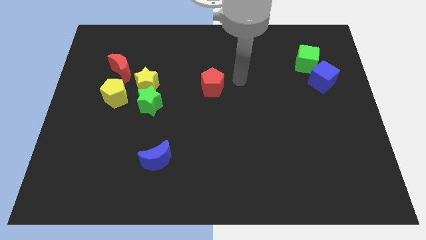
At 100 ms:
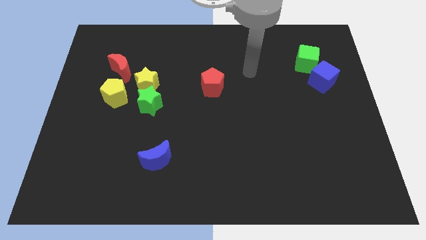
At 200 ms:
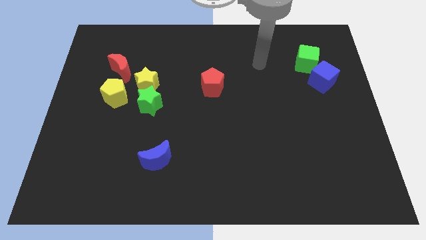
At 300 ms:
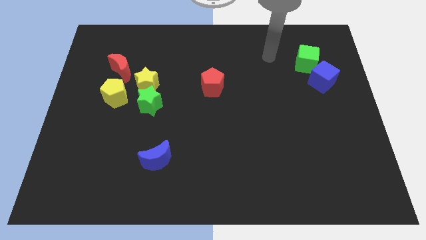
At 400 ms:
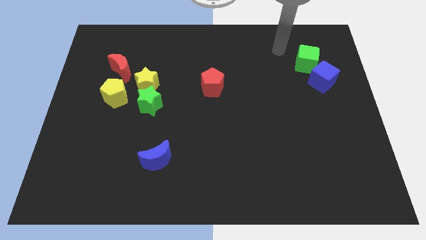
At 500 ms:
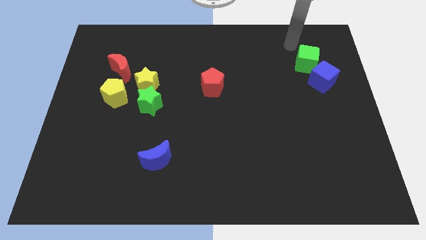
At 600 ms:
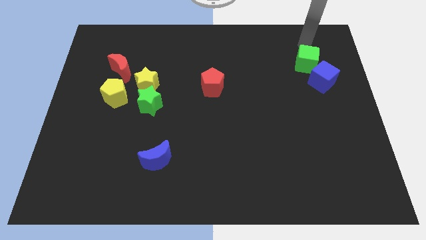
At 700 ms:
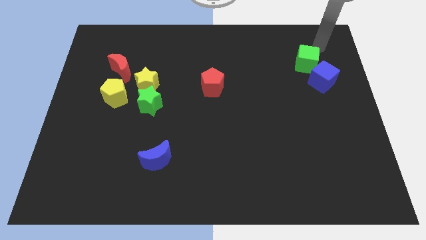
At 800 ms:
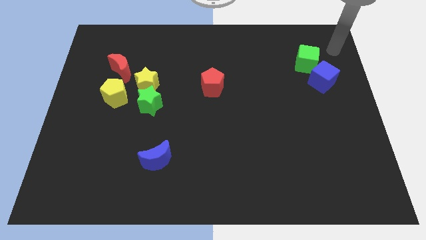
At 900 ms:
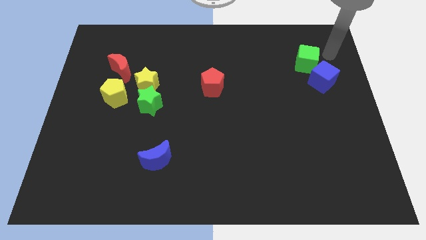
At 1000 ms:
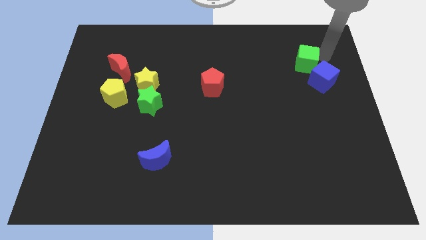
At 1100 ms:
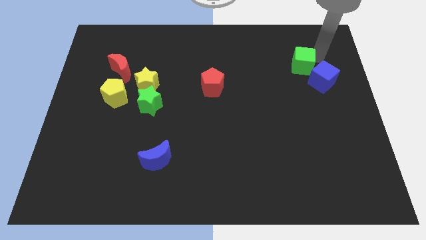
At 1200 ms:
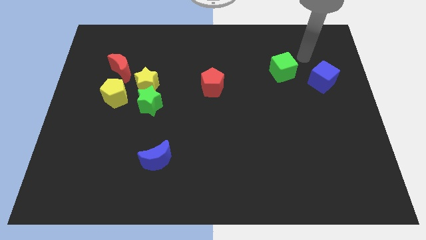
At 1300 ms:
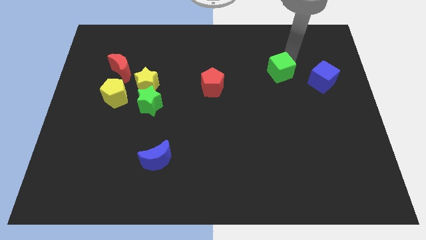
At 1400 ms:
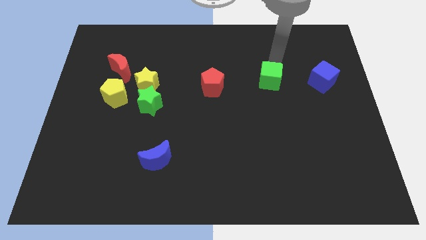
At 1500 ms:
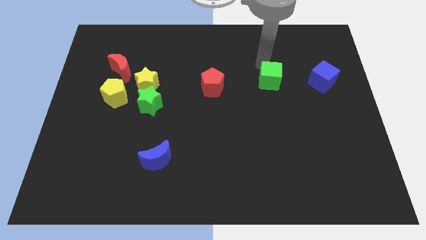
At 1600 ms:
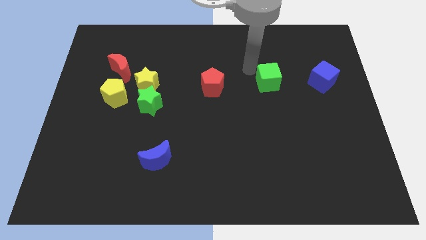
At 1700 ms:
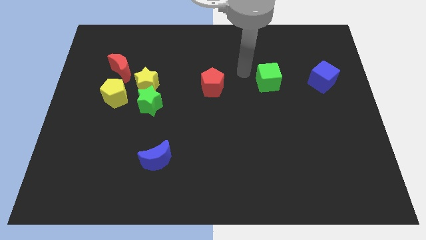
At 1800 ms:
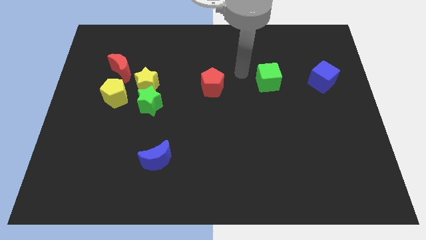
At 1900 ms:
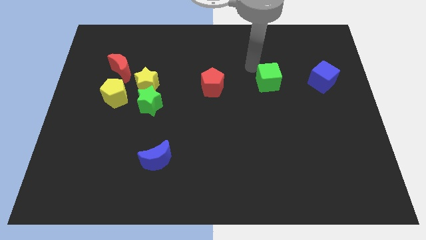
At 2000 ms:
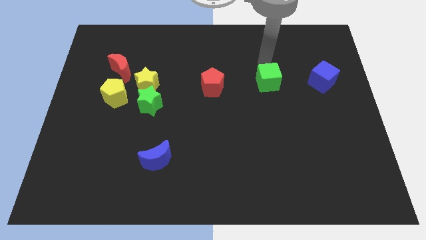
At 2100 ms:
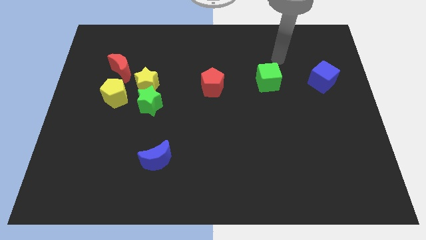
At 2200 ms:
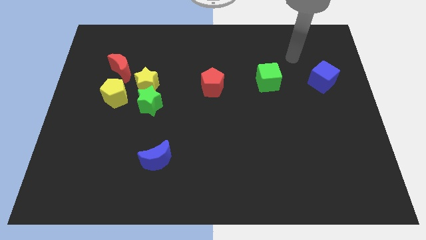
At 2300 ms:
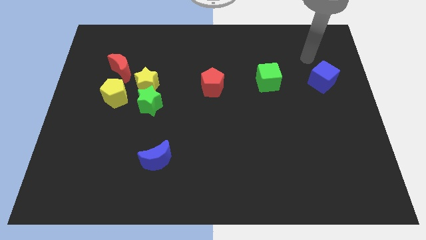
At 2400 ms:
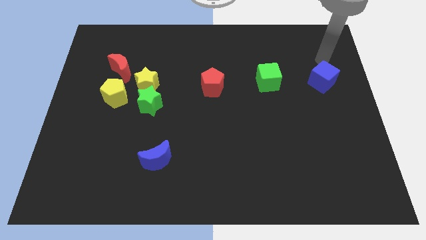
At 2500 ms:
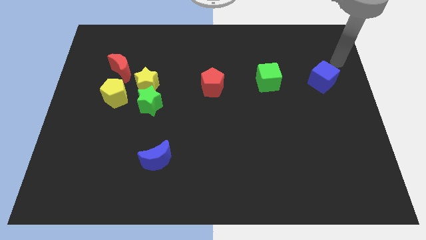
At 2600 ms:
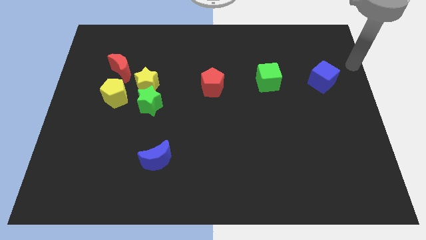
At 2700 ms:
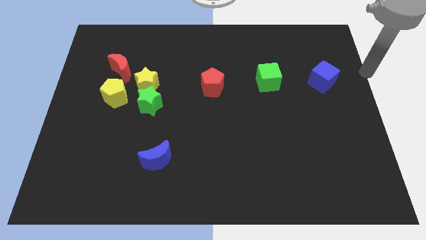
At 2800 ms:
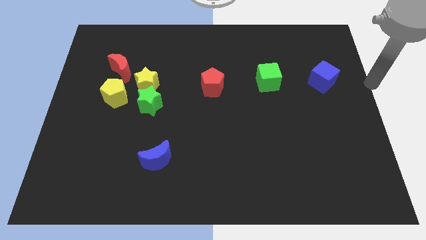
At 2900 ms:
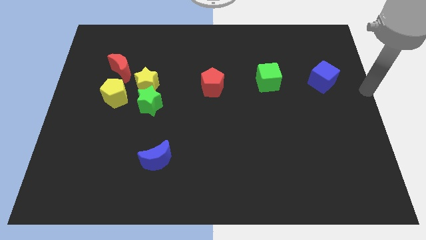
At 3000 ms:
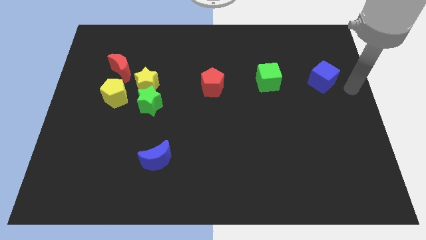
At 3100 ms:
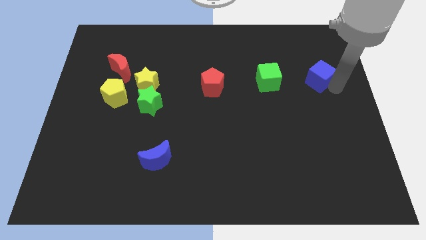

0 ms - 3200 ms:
separate green cube from the blue cube

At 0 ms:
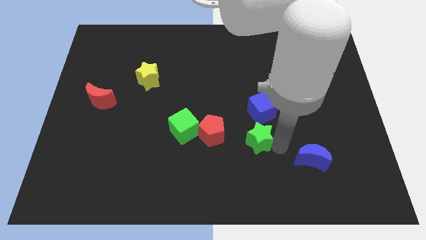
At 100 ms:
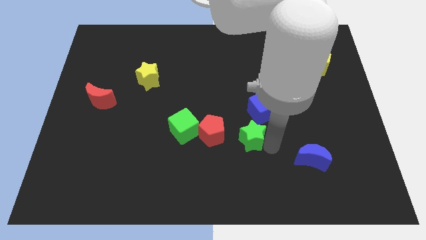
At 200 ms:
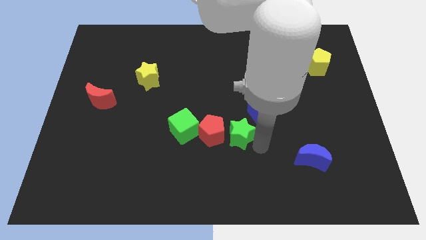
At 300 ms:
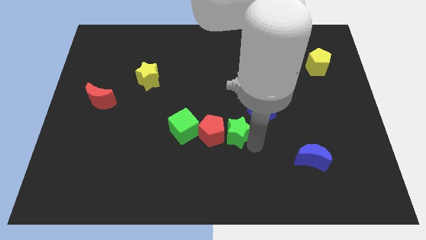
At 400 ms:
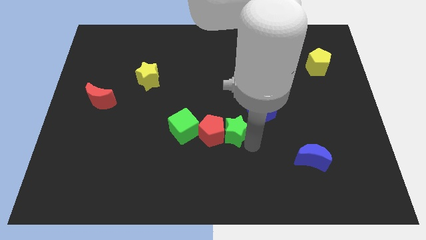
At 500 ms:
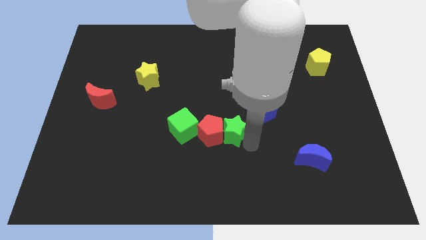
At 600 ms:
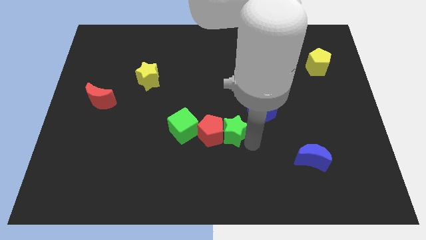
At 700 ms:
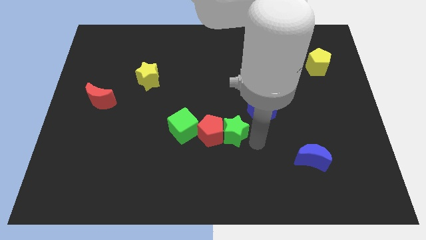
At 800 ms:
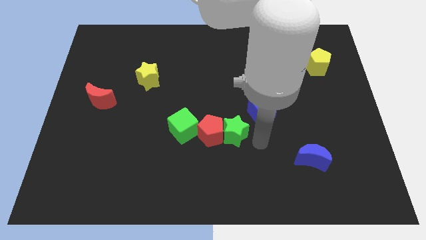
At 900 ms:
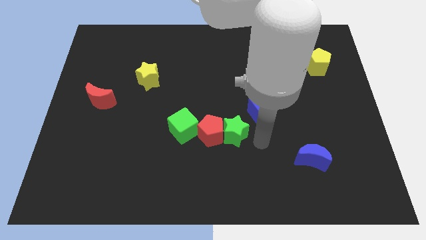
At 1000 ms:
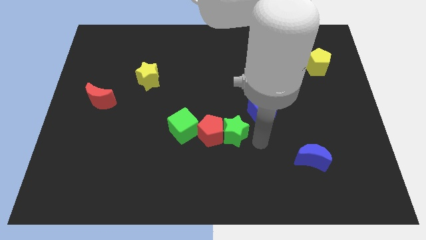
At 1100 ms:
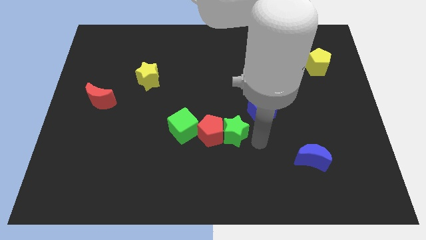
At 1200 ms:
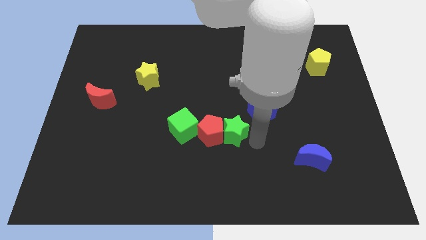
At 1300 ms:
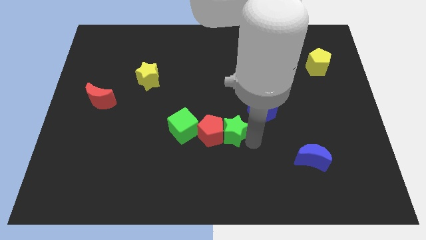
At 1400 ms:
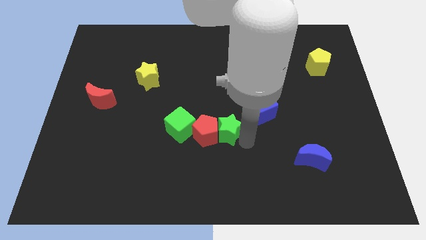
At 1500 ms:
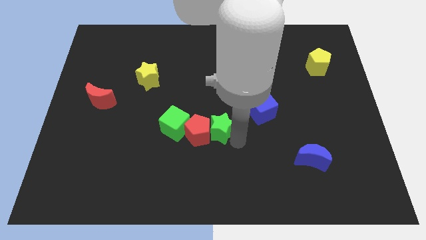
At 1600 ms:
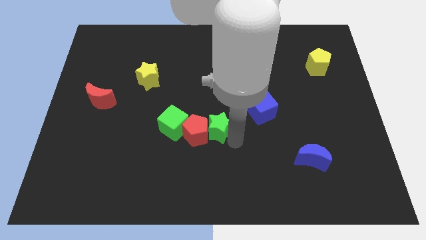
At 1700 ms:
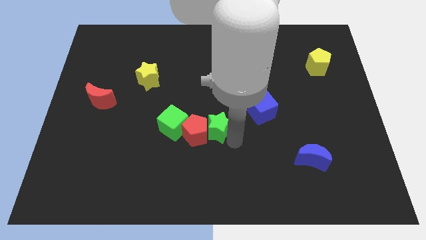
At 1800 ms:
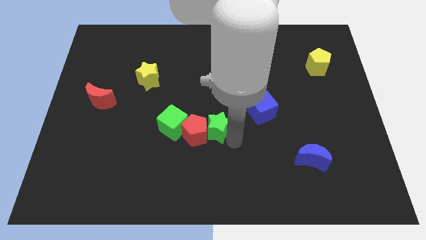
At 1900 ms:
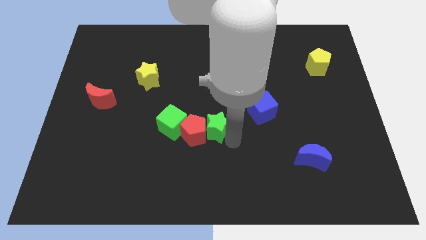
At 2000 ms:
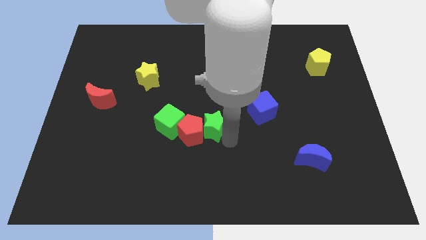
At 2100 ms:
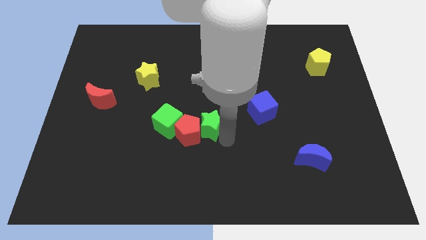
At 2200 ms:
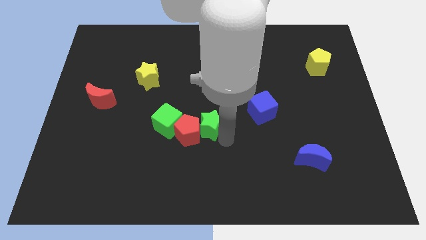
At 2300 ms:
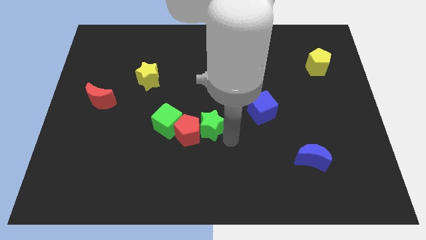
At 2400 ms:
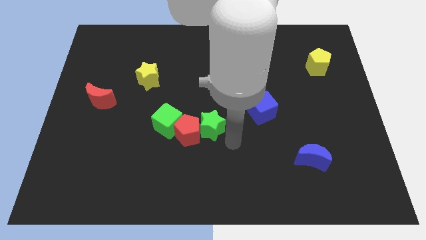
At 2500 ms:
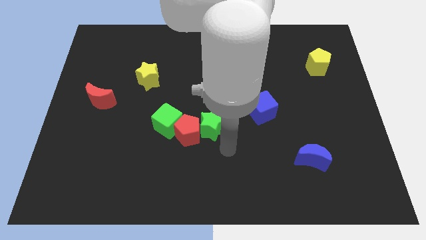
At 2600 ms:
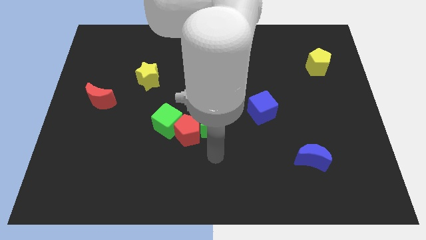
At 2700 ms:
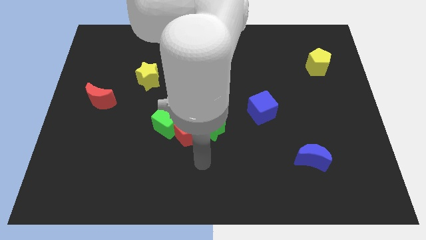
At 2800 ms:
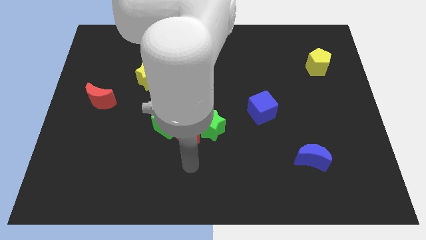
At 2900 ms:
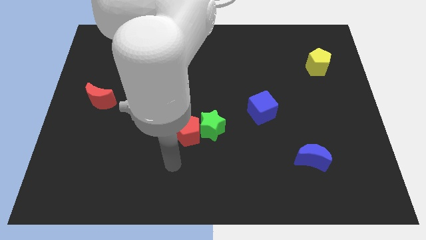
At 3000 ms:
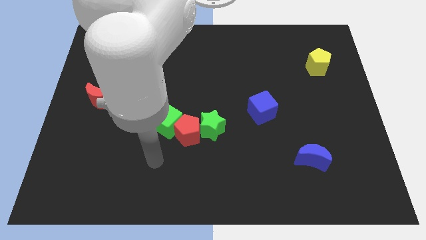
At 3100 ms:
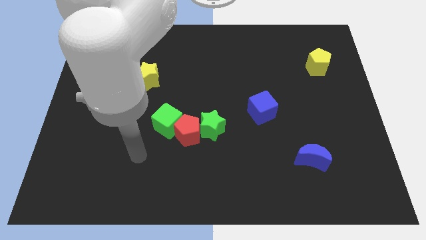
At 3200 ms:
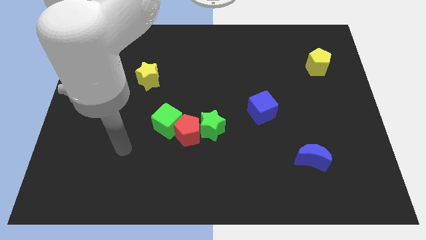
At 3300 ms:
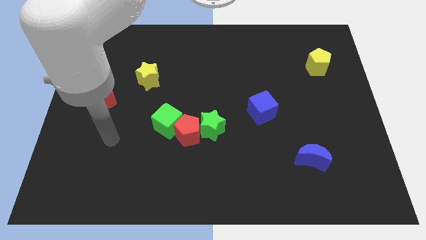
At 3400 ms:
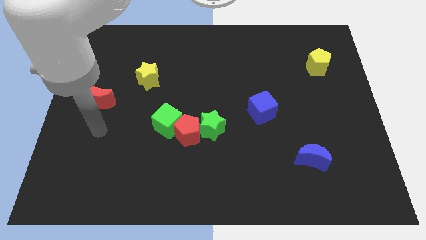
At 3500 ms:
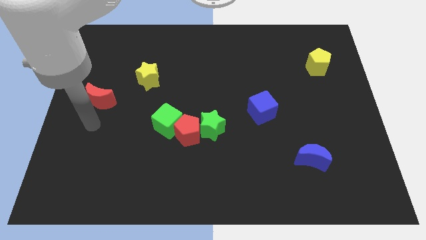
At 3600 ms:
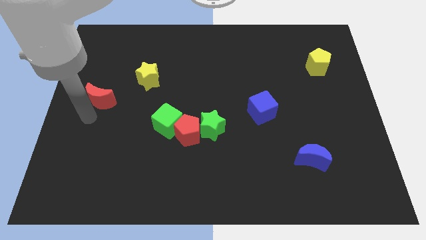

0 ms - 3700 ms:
slightly move the red pentagon and green cube with green star

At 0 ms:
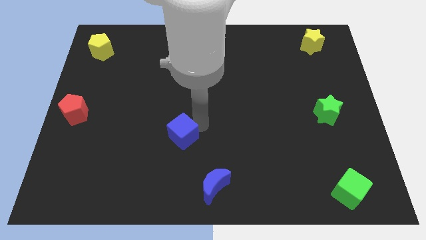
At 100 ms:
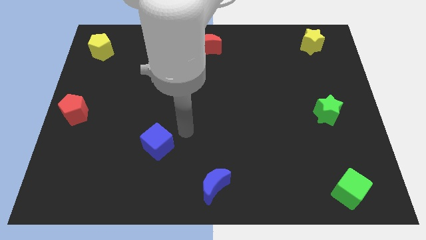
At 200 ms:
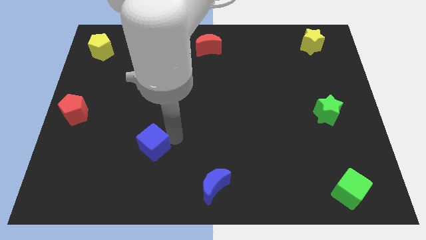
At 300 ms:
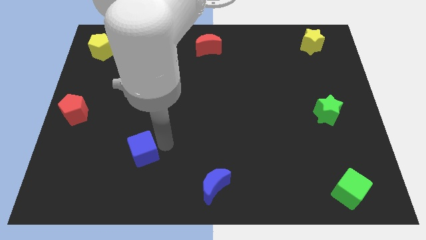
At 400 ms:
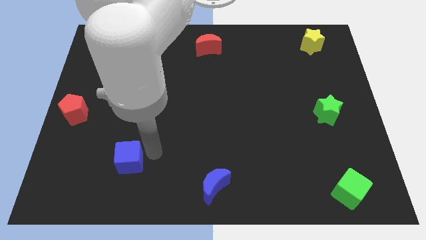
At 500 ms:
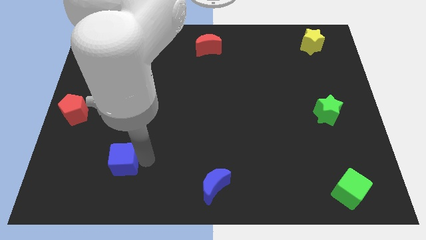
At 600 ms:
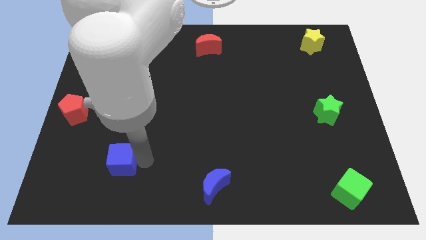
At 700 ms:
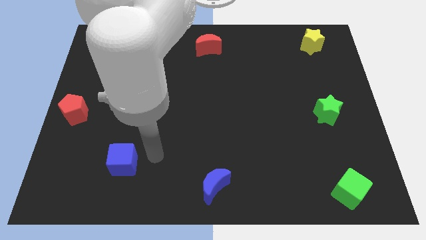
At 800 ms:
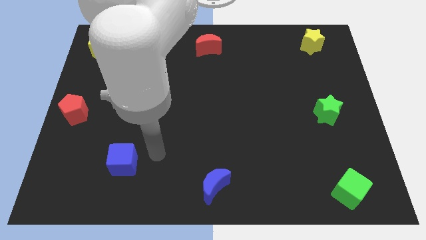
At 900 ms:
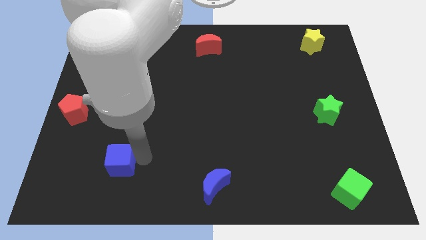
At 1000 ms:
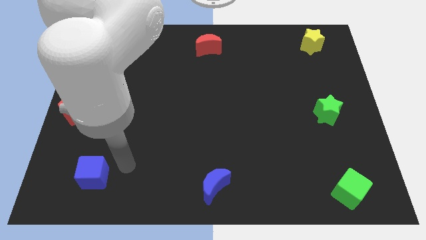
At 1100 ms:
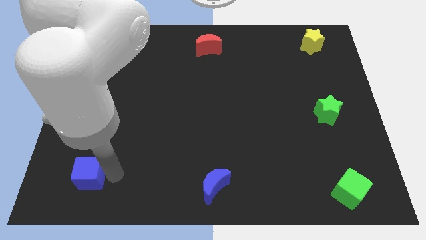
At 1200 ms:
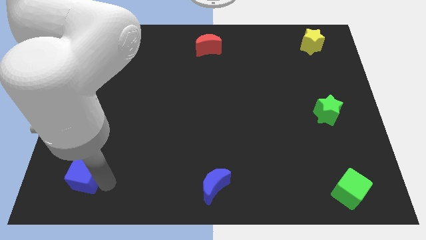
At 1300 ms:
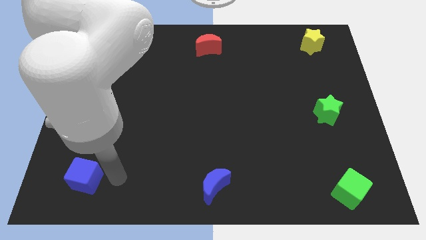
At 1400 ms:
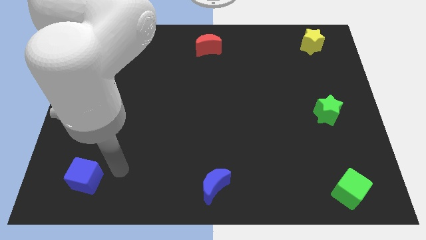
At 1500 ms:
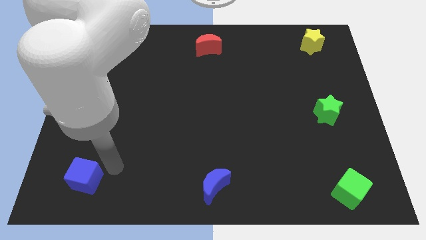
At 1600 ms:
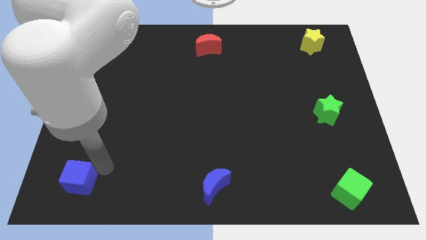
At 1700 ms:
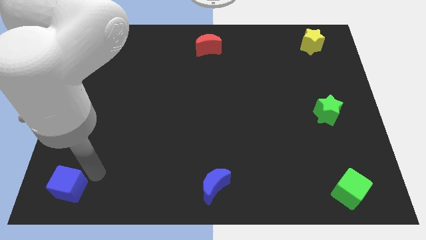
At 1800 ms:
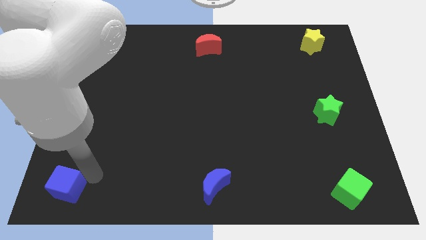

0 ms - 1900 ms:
push the blue cube towards the bottom left corner of the board

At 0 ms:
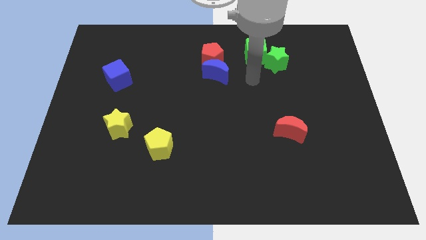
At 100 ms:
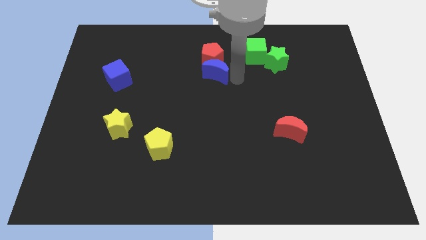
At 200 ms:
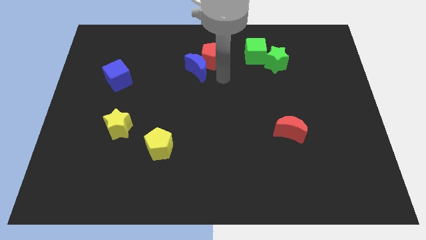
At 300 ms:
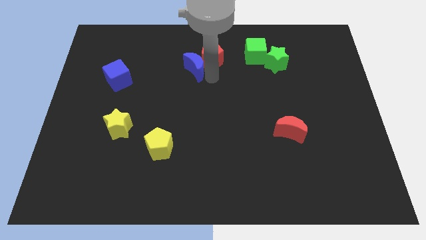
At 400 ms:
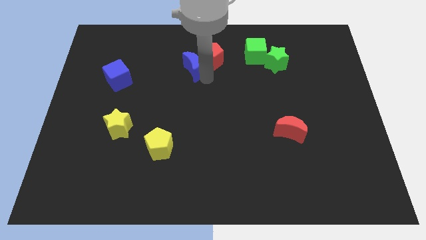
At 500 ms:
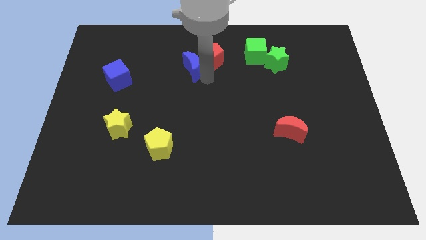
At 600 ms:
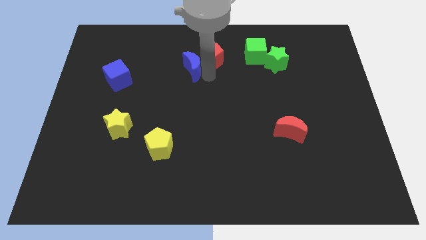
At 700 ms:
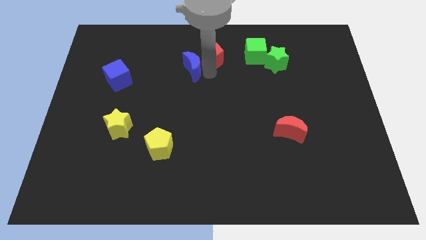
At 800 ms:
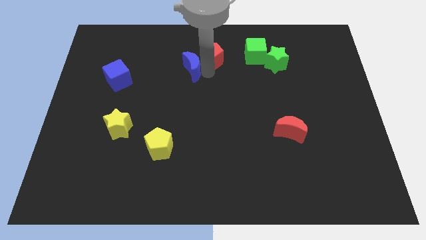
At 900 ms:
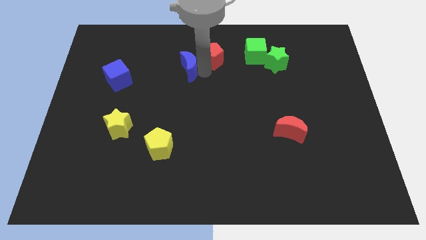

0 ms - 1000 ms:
touch the bottom of blue moon
